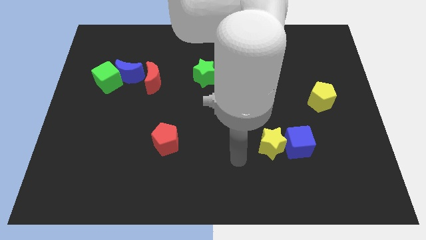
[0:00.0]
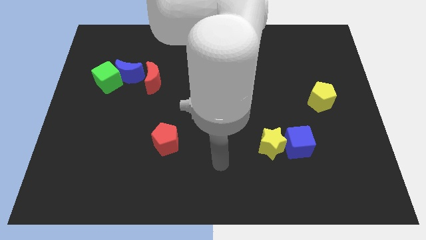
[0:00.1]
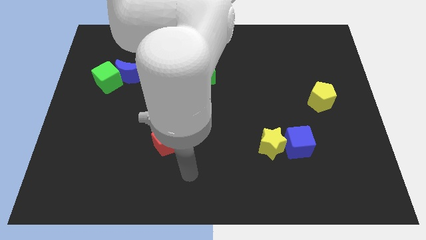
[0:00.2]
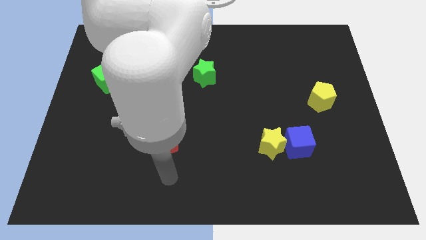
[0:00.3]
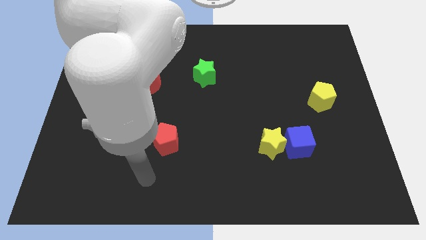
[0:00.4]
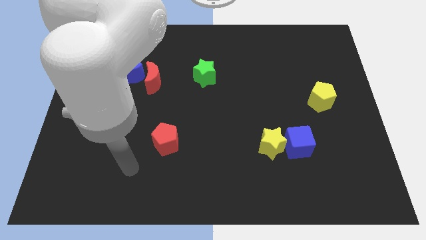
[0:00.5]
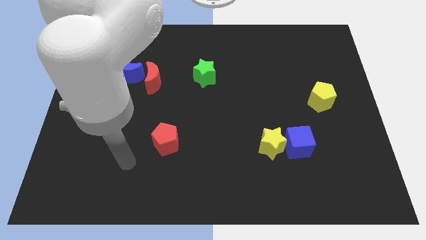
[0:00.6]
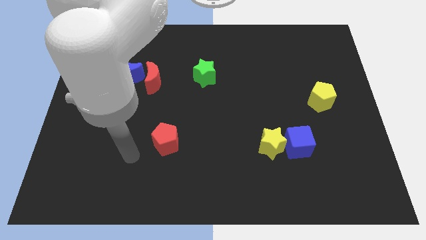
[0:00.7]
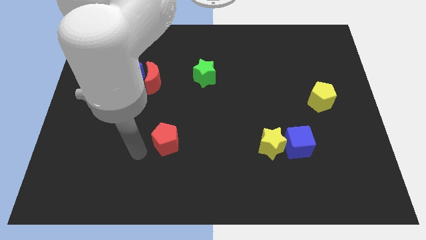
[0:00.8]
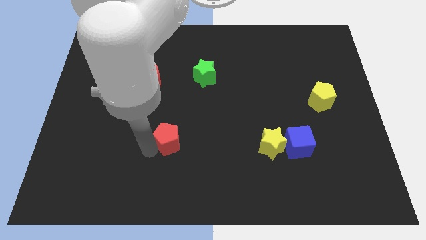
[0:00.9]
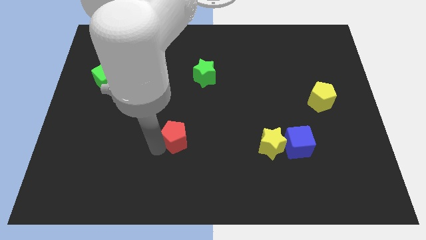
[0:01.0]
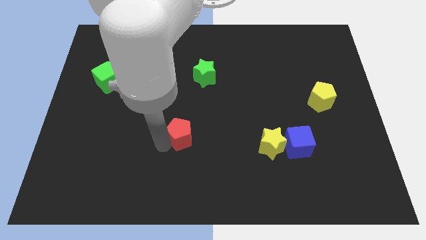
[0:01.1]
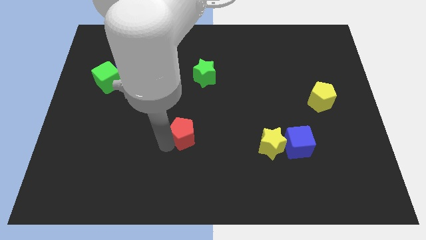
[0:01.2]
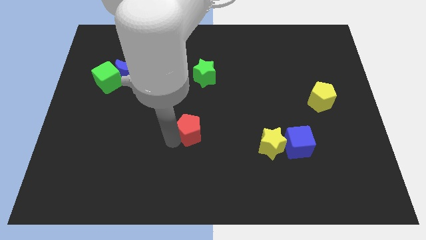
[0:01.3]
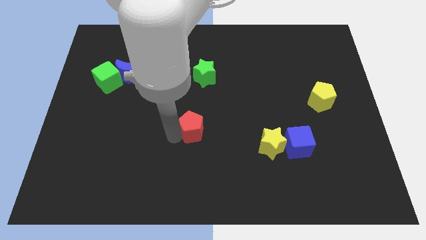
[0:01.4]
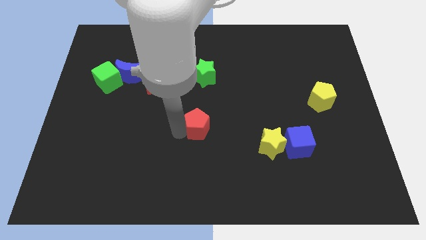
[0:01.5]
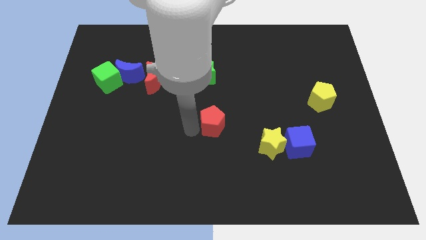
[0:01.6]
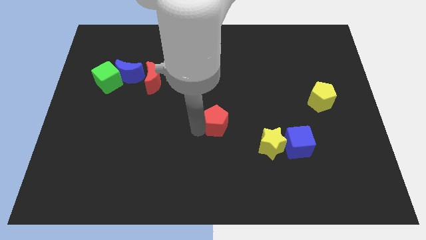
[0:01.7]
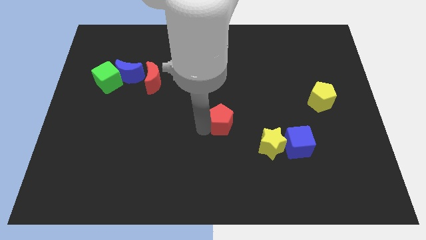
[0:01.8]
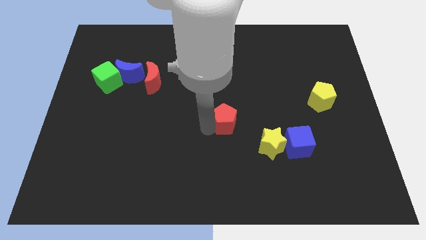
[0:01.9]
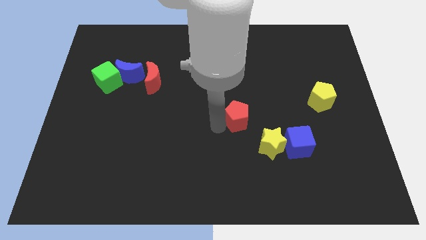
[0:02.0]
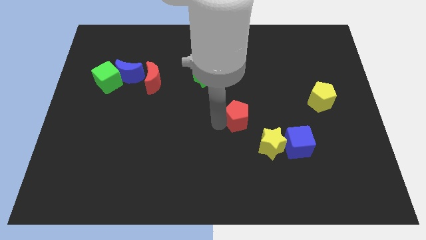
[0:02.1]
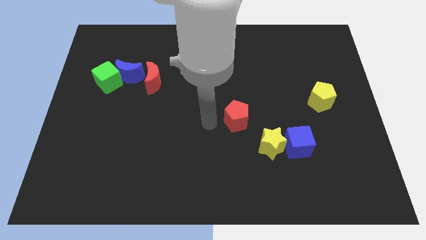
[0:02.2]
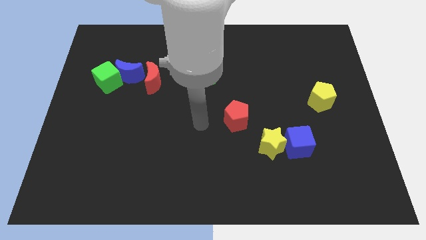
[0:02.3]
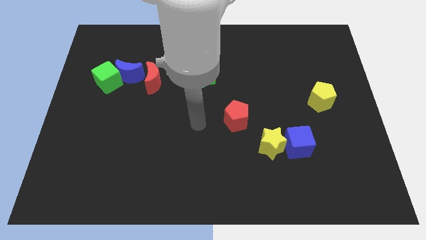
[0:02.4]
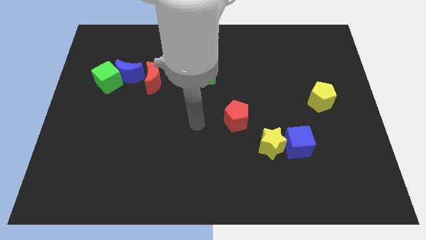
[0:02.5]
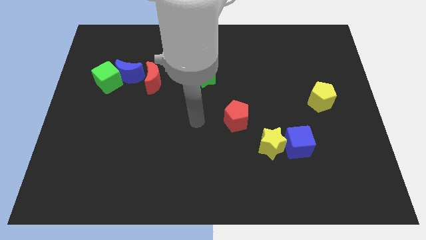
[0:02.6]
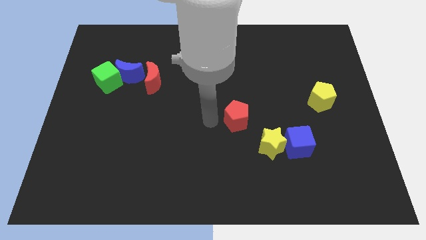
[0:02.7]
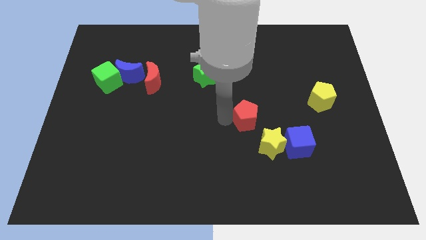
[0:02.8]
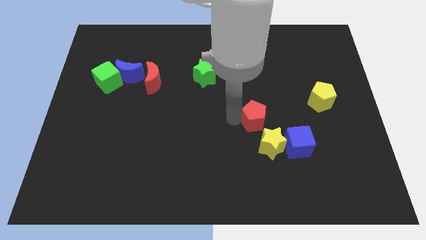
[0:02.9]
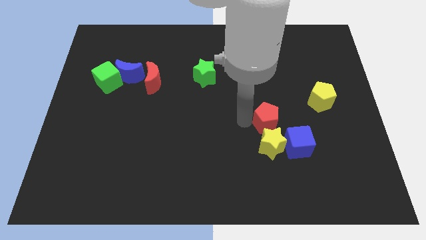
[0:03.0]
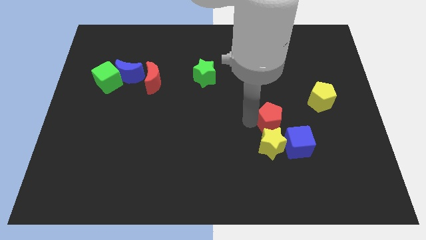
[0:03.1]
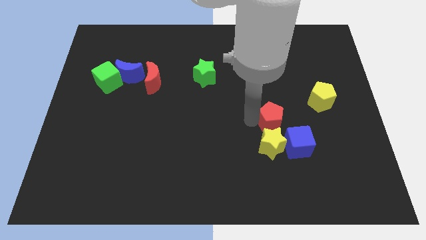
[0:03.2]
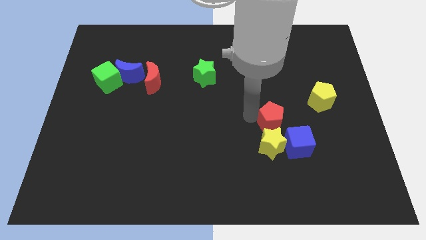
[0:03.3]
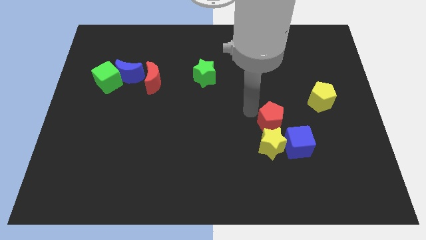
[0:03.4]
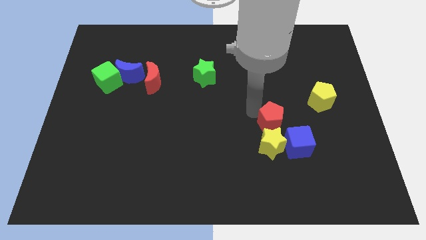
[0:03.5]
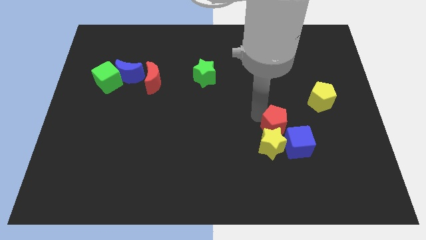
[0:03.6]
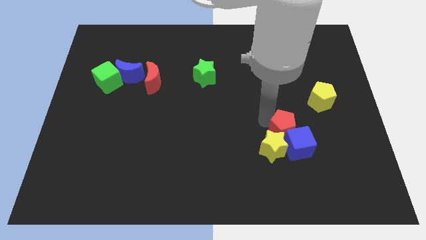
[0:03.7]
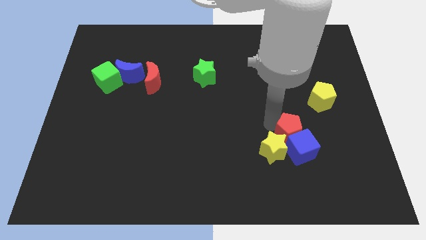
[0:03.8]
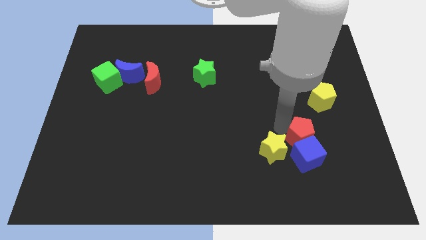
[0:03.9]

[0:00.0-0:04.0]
put the red pentagon next to the blue cube

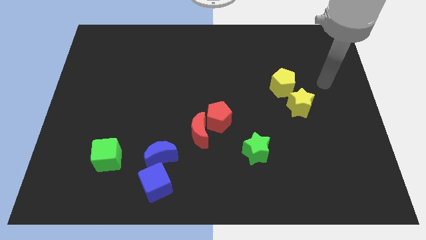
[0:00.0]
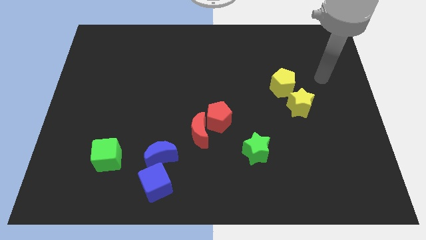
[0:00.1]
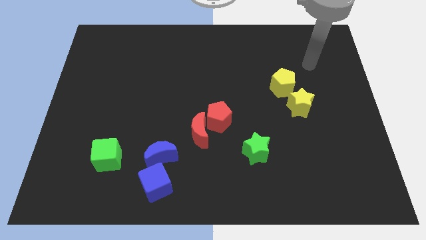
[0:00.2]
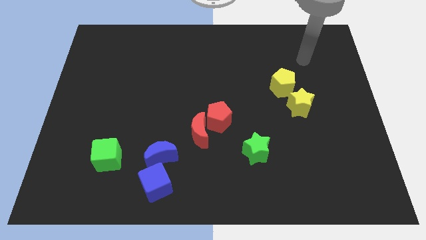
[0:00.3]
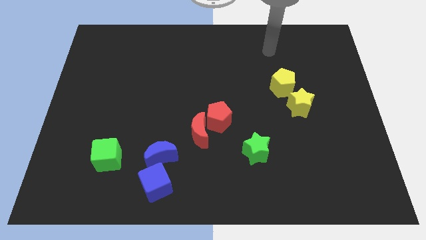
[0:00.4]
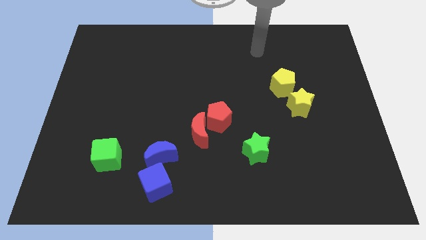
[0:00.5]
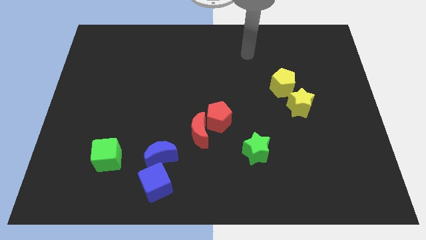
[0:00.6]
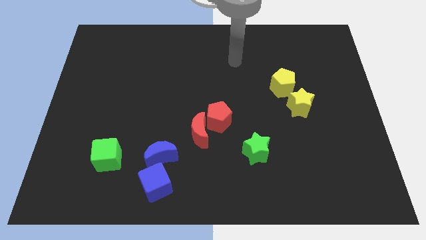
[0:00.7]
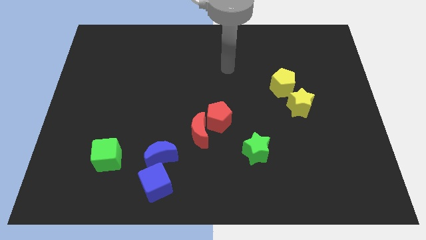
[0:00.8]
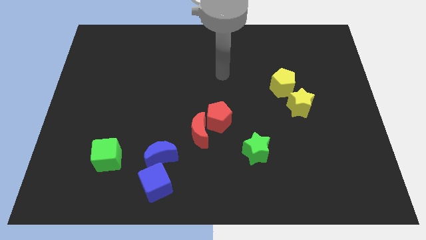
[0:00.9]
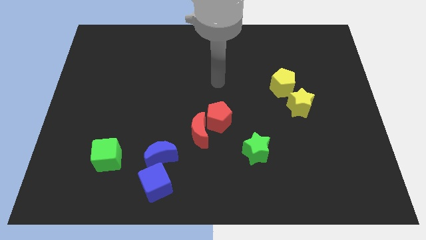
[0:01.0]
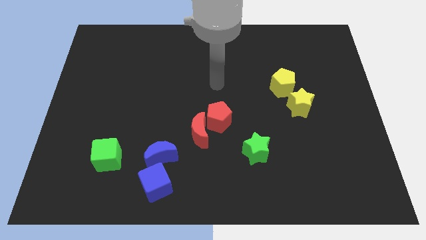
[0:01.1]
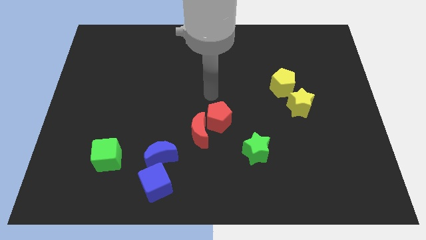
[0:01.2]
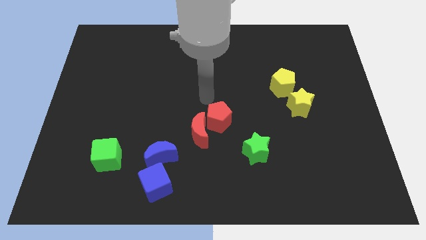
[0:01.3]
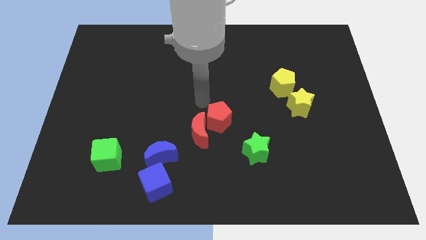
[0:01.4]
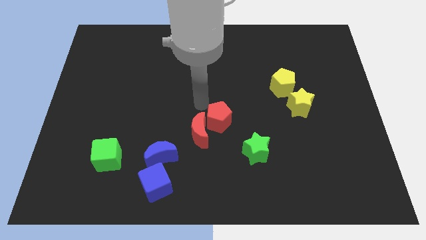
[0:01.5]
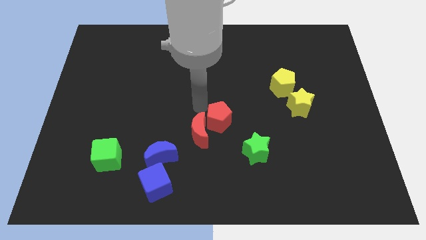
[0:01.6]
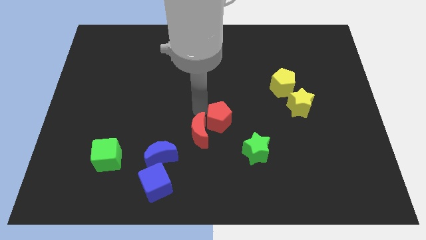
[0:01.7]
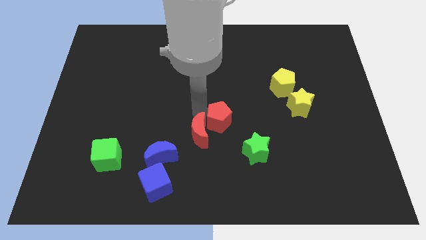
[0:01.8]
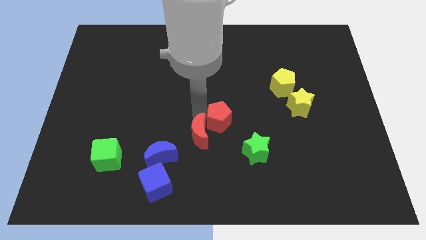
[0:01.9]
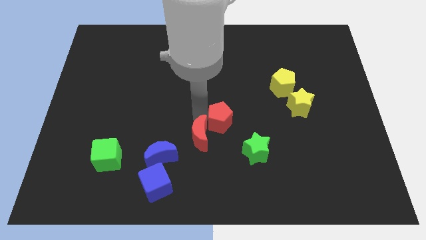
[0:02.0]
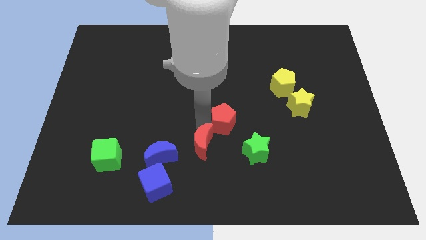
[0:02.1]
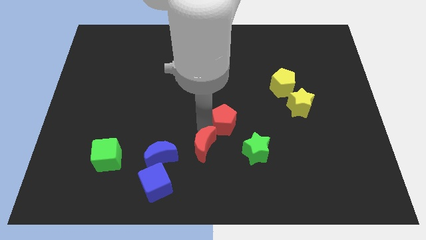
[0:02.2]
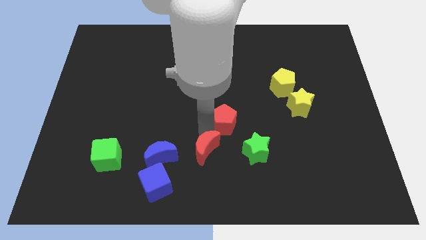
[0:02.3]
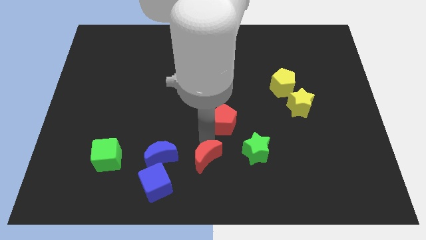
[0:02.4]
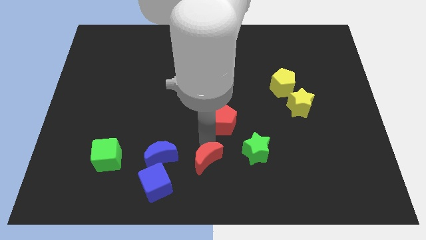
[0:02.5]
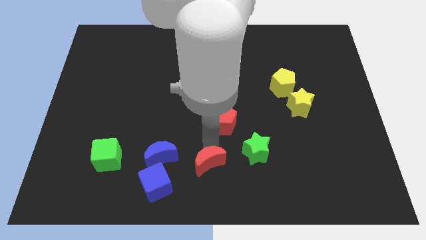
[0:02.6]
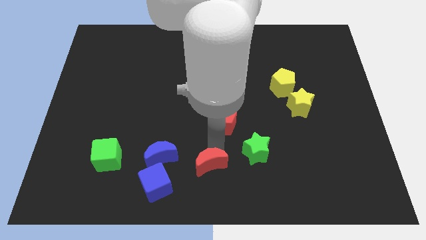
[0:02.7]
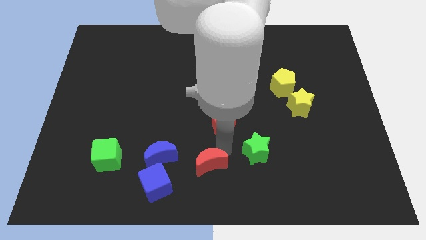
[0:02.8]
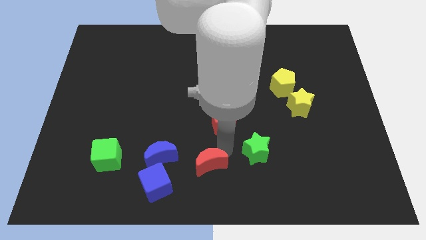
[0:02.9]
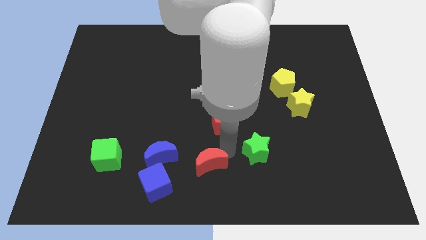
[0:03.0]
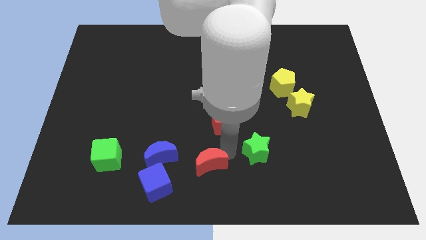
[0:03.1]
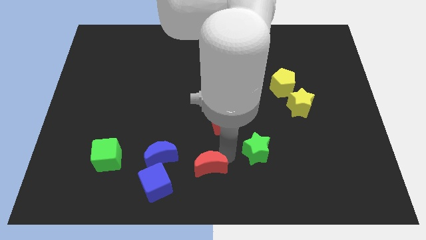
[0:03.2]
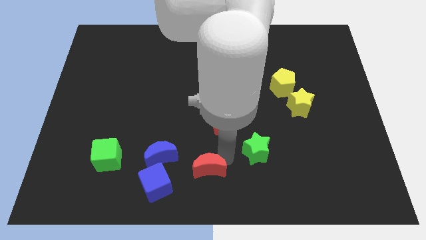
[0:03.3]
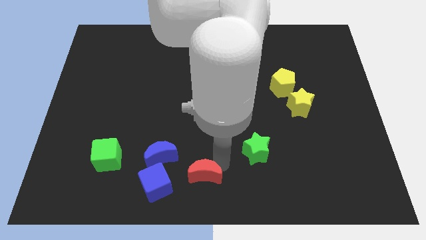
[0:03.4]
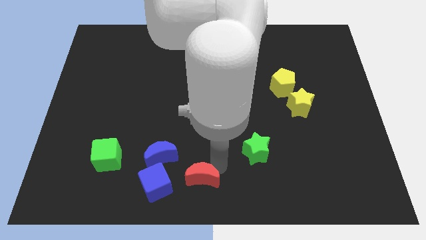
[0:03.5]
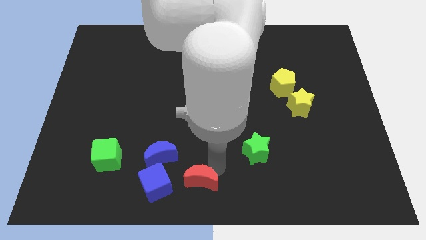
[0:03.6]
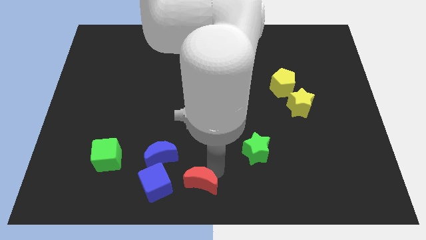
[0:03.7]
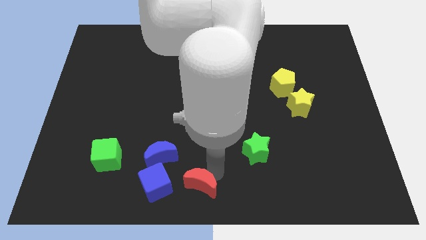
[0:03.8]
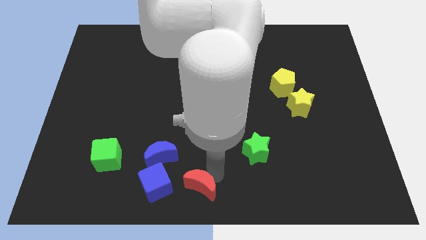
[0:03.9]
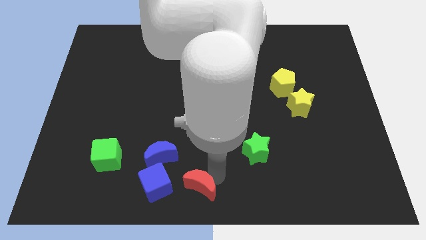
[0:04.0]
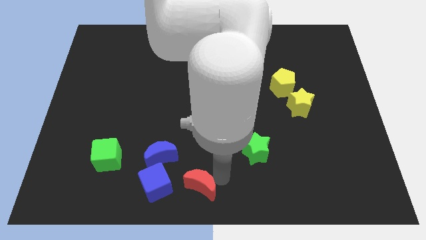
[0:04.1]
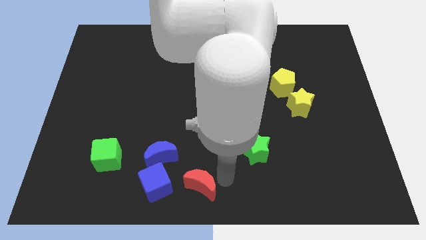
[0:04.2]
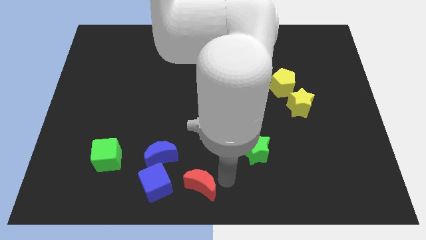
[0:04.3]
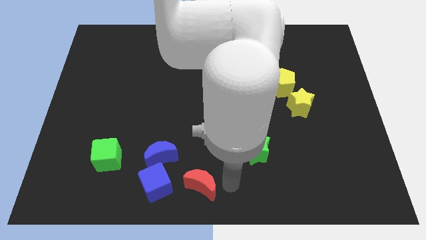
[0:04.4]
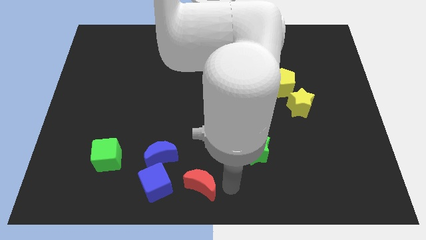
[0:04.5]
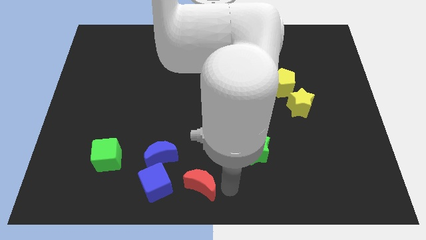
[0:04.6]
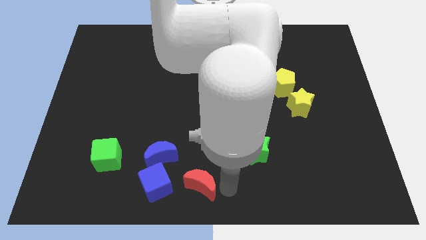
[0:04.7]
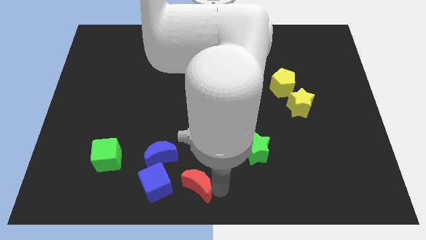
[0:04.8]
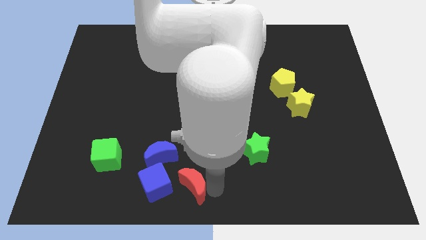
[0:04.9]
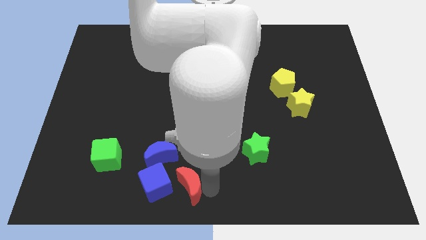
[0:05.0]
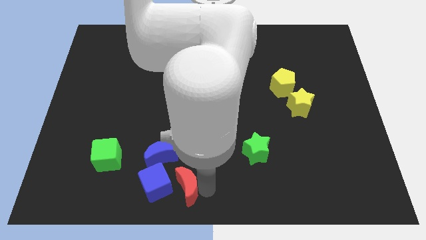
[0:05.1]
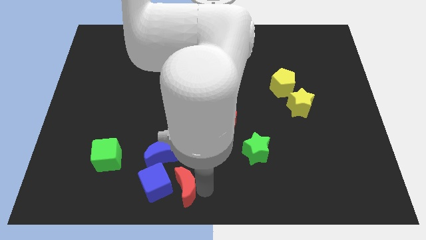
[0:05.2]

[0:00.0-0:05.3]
move the red moon to the blue cube
